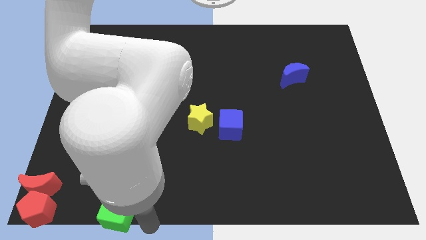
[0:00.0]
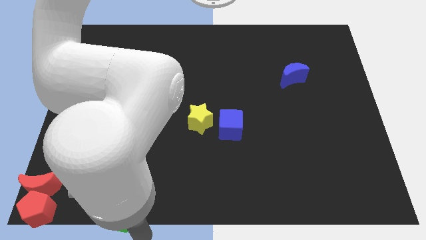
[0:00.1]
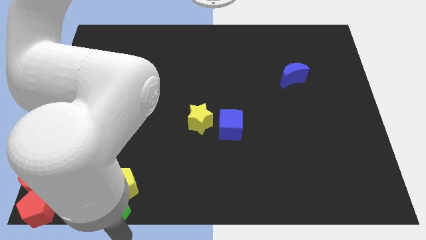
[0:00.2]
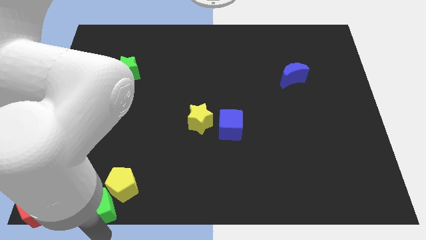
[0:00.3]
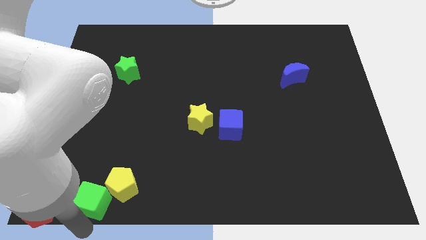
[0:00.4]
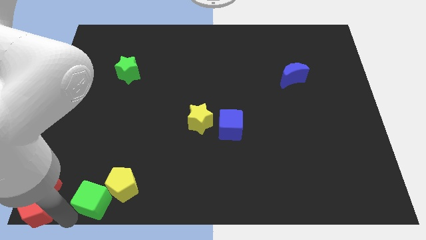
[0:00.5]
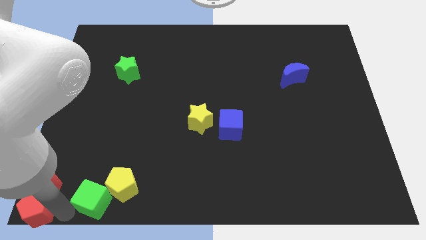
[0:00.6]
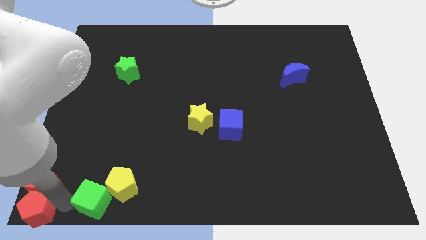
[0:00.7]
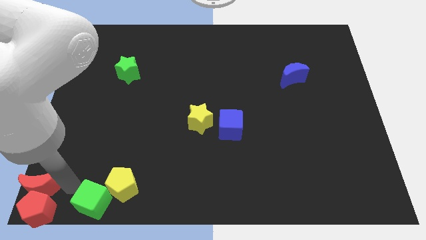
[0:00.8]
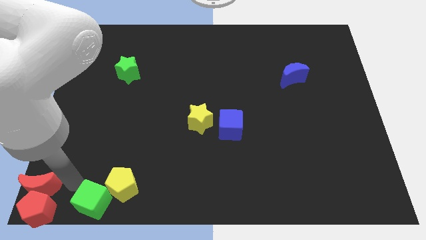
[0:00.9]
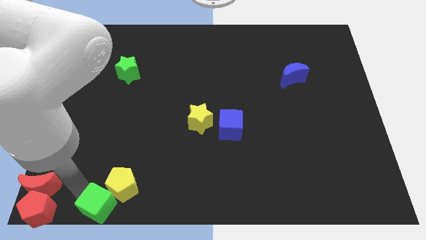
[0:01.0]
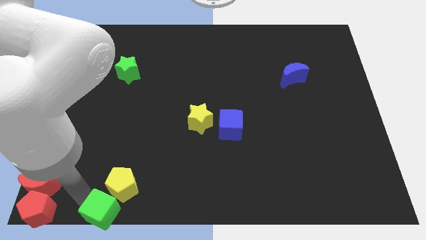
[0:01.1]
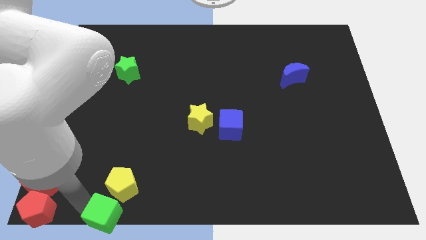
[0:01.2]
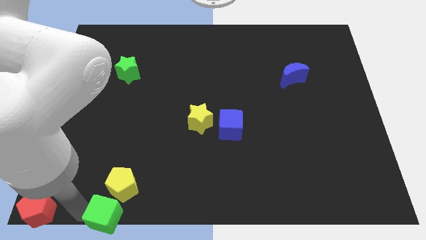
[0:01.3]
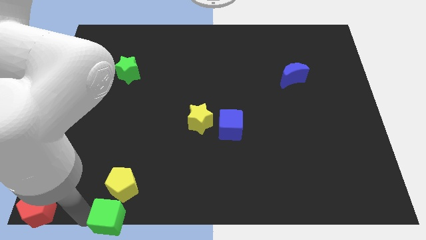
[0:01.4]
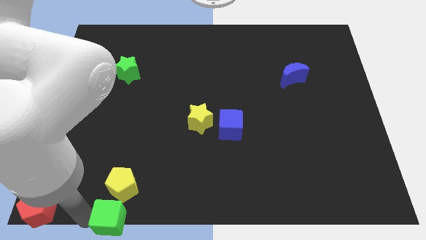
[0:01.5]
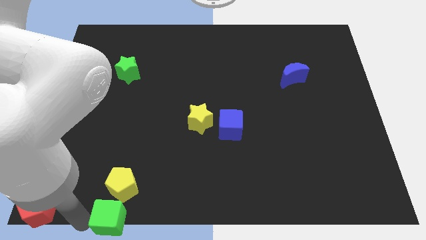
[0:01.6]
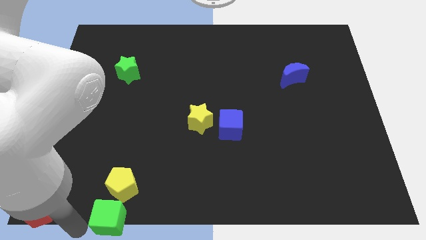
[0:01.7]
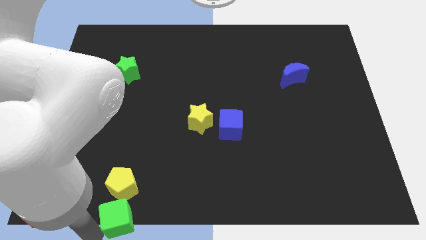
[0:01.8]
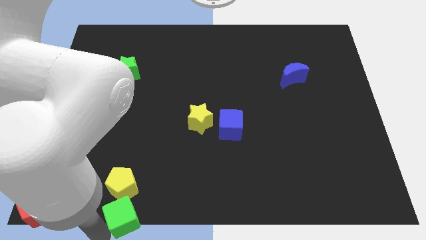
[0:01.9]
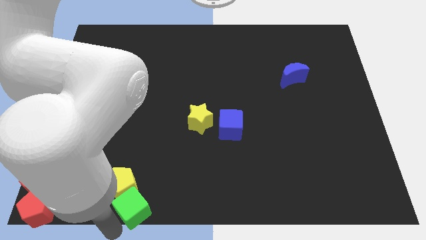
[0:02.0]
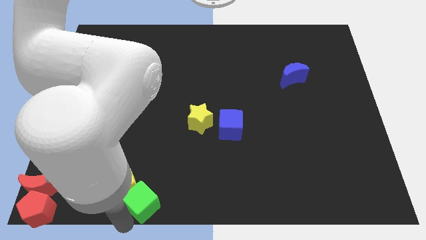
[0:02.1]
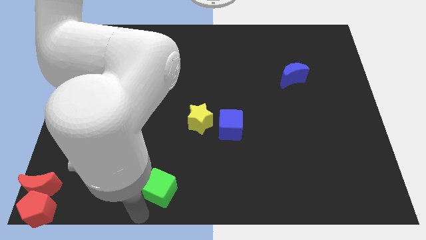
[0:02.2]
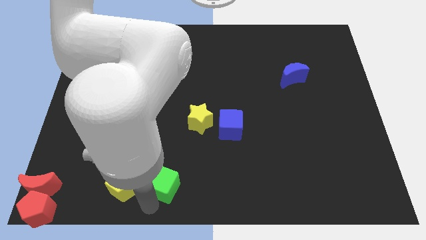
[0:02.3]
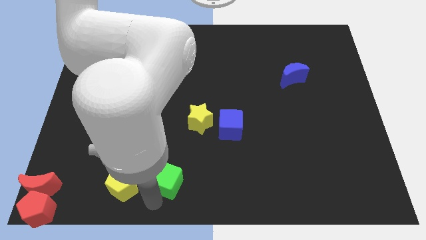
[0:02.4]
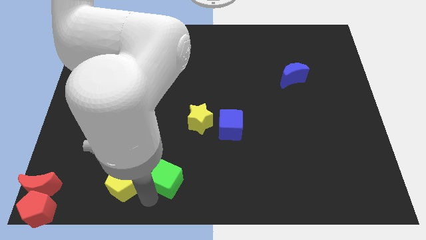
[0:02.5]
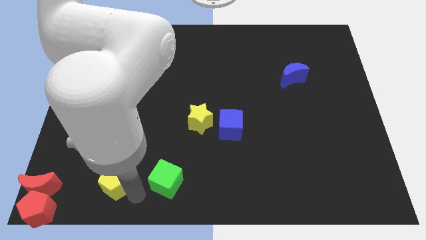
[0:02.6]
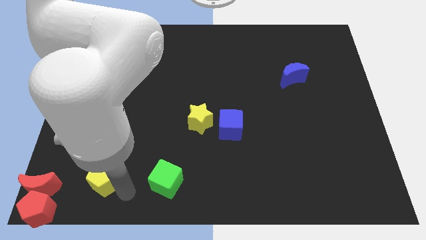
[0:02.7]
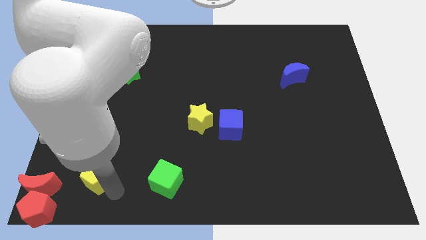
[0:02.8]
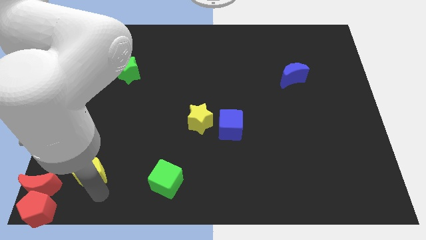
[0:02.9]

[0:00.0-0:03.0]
push the green cube away from yellow pentagon

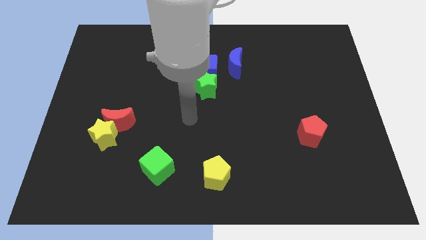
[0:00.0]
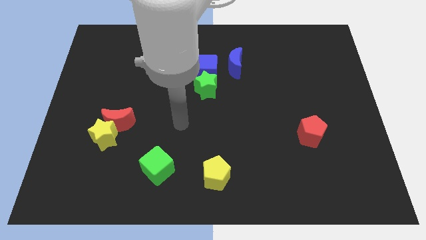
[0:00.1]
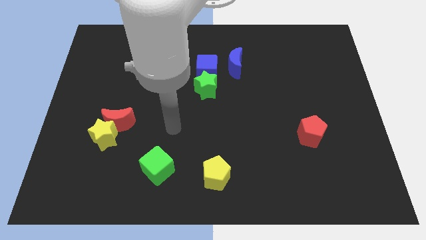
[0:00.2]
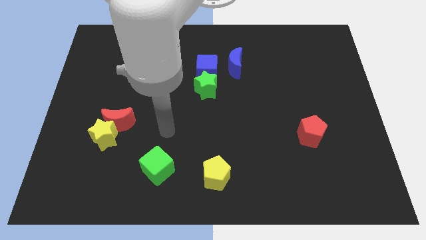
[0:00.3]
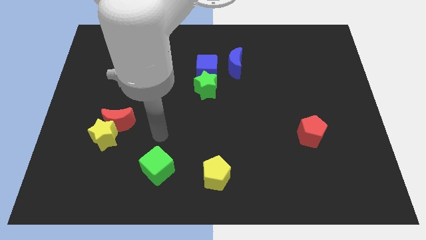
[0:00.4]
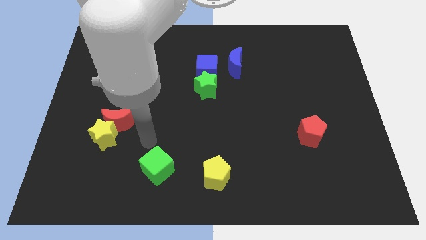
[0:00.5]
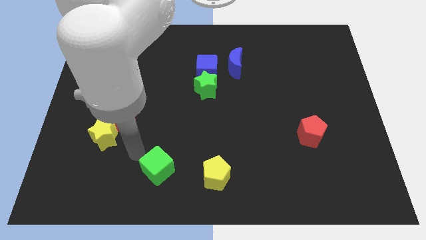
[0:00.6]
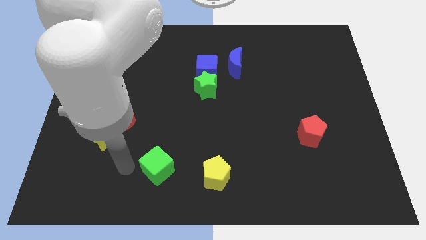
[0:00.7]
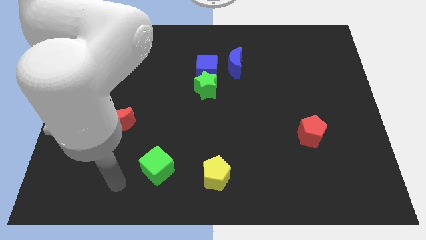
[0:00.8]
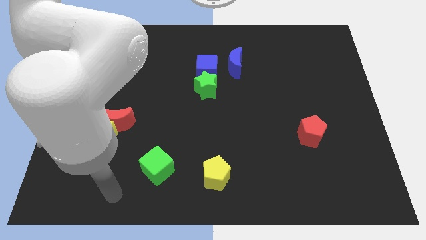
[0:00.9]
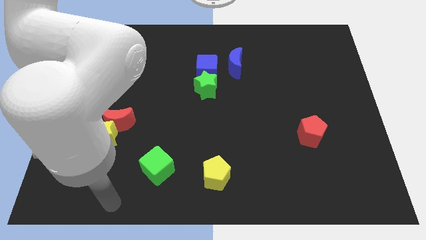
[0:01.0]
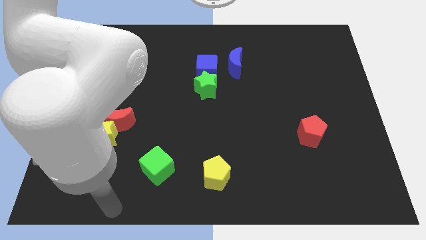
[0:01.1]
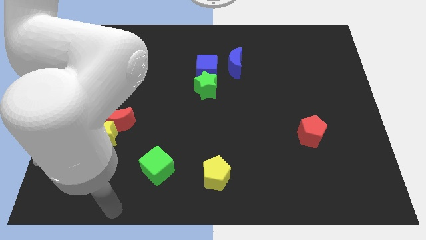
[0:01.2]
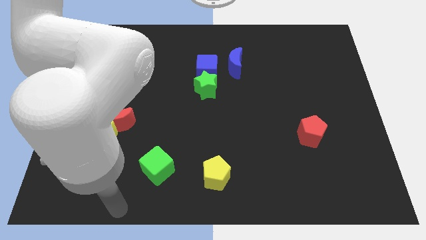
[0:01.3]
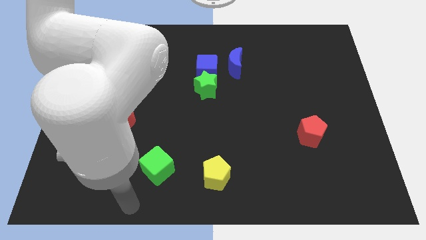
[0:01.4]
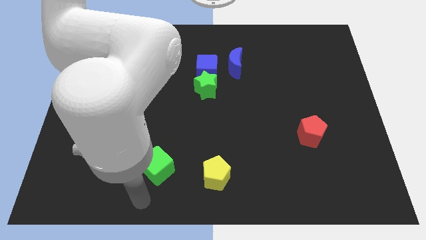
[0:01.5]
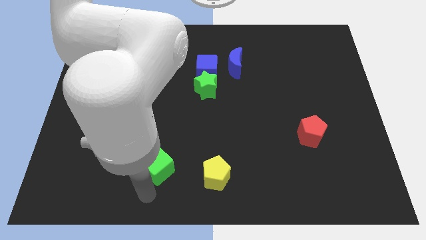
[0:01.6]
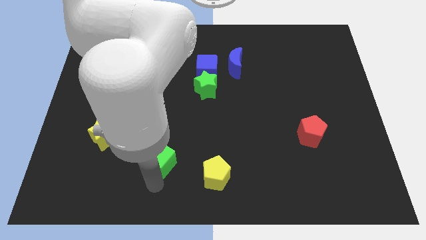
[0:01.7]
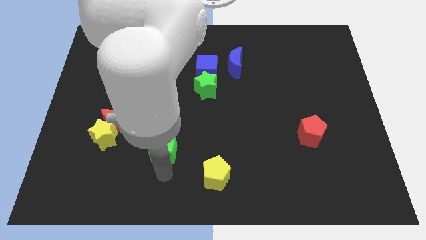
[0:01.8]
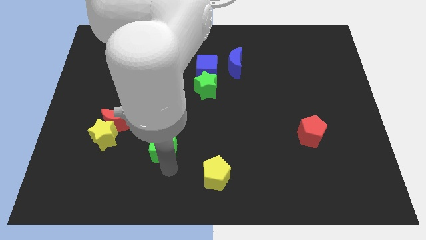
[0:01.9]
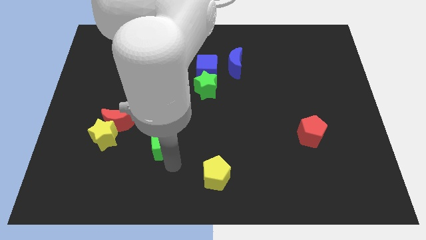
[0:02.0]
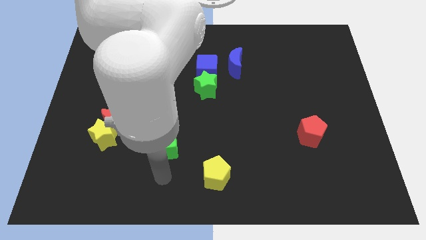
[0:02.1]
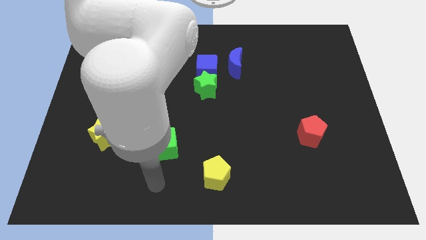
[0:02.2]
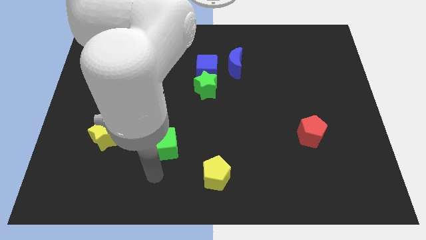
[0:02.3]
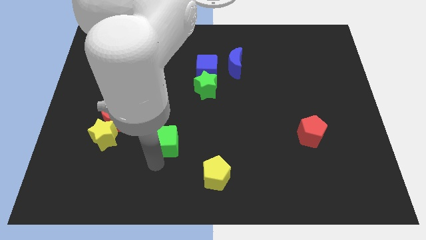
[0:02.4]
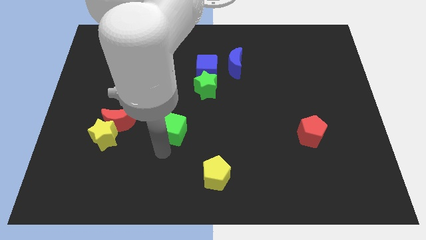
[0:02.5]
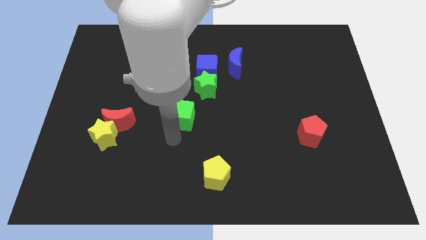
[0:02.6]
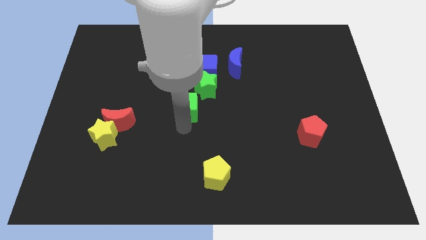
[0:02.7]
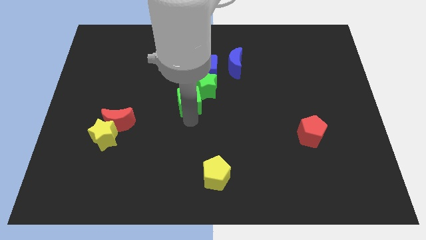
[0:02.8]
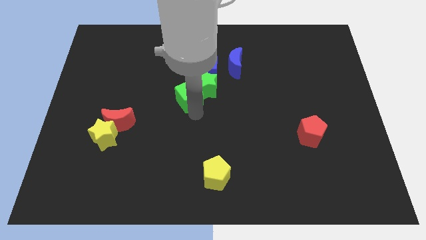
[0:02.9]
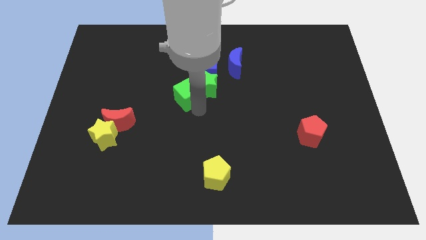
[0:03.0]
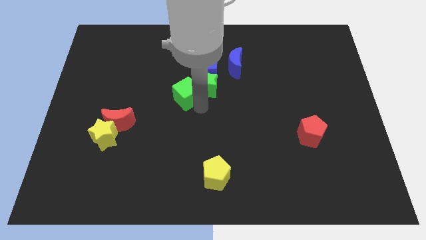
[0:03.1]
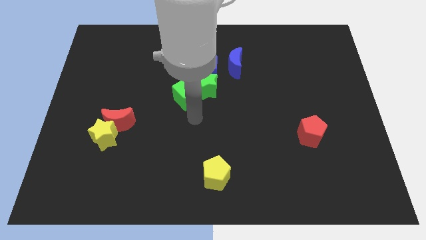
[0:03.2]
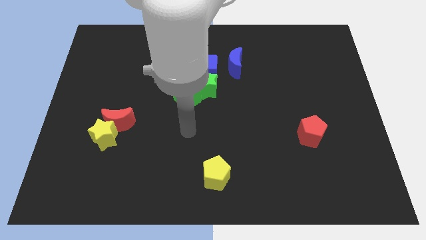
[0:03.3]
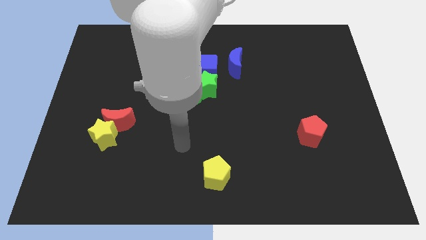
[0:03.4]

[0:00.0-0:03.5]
move the green cube into green star

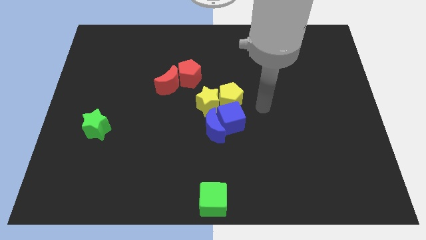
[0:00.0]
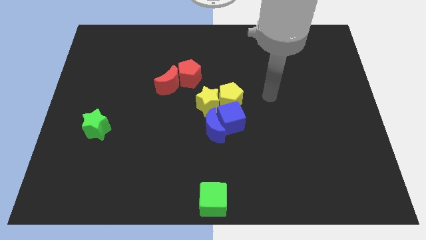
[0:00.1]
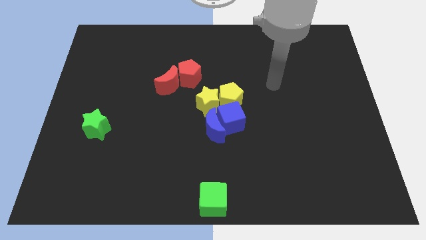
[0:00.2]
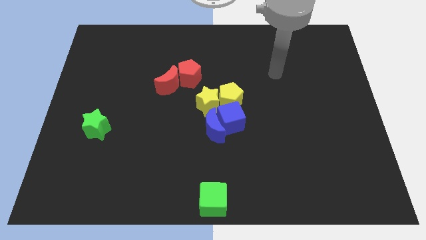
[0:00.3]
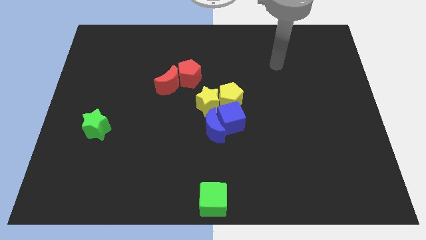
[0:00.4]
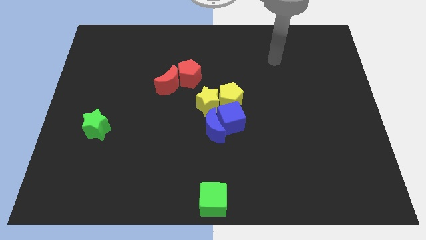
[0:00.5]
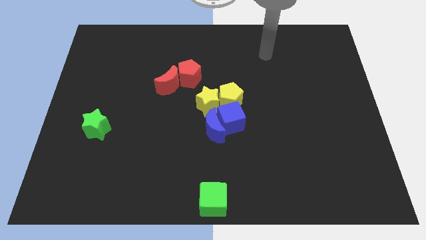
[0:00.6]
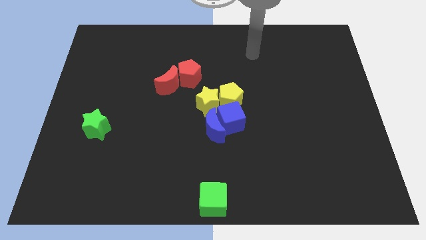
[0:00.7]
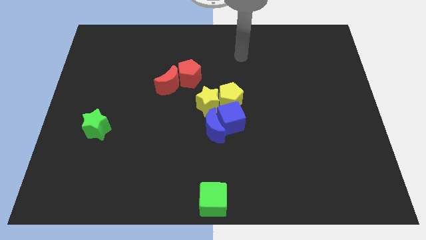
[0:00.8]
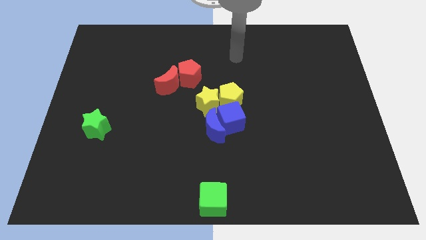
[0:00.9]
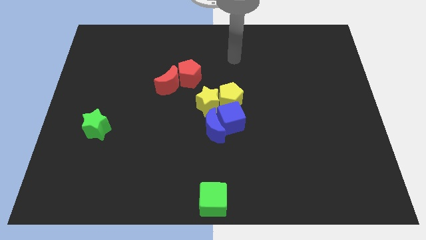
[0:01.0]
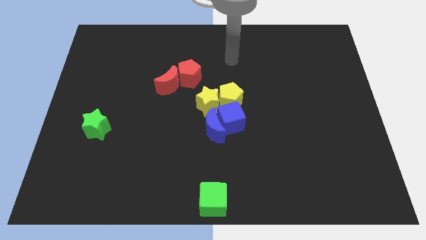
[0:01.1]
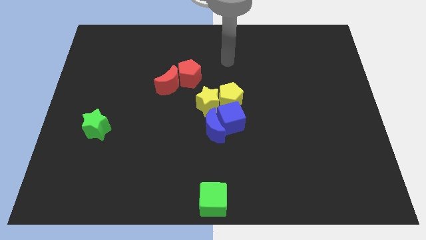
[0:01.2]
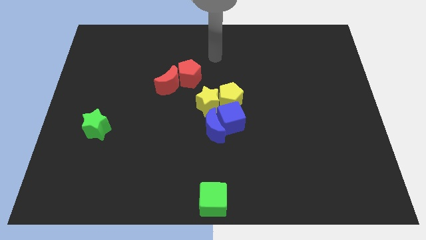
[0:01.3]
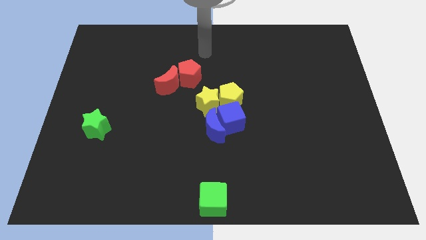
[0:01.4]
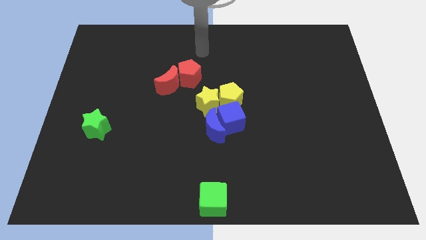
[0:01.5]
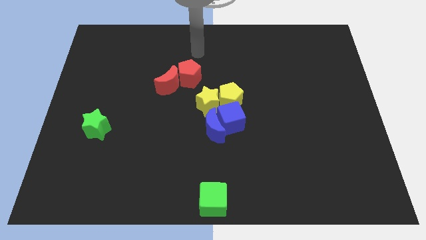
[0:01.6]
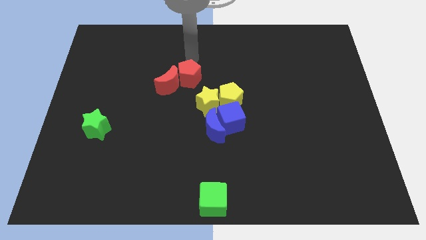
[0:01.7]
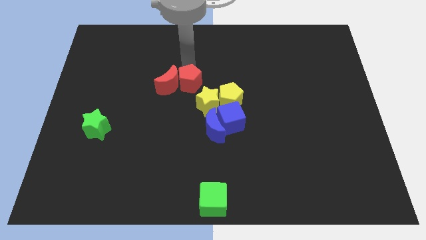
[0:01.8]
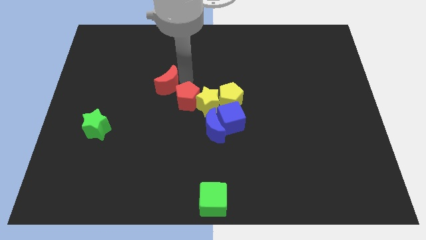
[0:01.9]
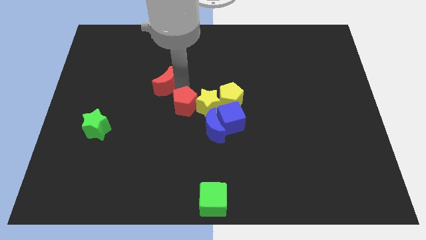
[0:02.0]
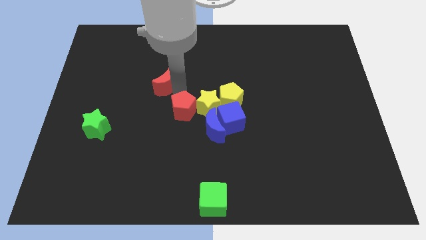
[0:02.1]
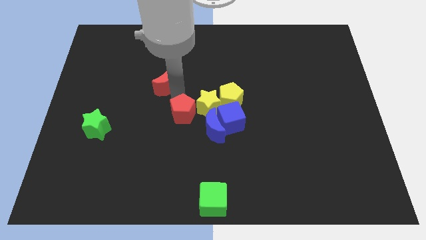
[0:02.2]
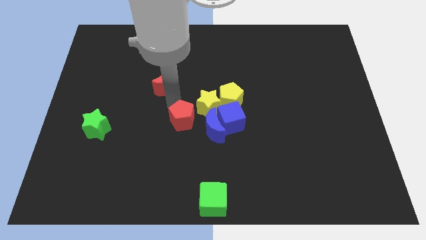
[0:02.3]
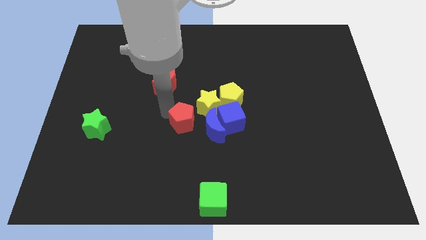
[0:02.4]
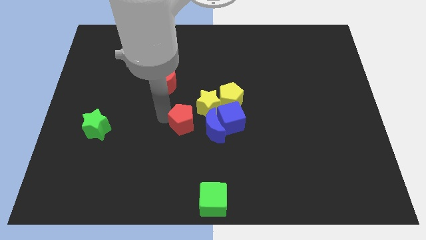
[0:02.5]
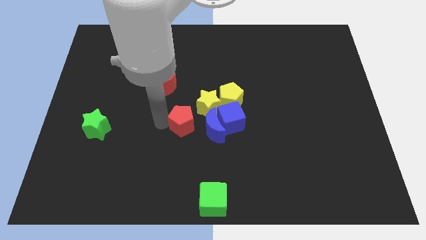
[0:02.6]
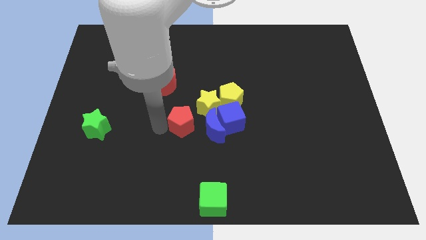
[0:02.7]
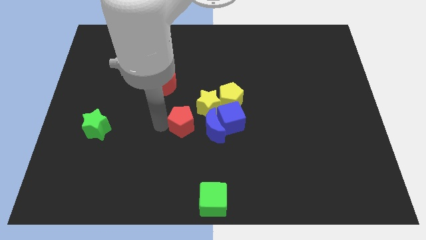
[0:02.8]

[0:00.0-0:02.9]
separate the red pentagon from red crescent
